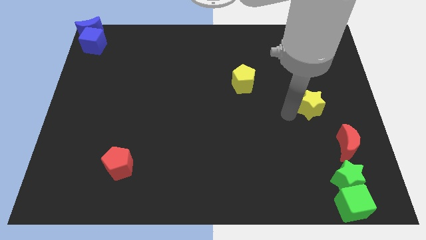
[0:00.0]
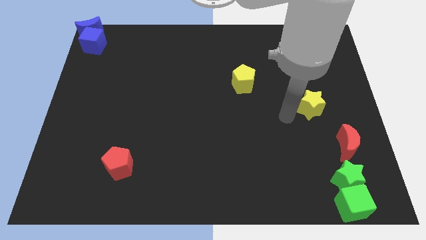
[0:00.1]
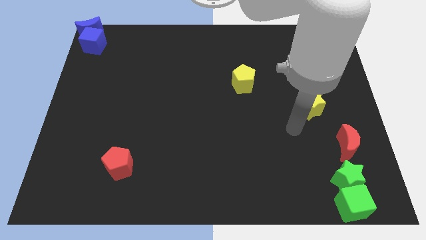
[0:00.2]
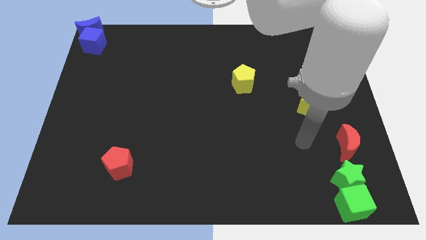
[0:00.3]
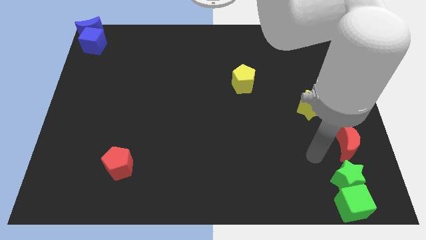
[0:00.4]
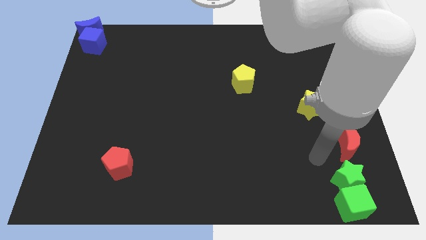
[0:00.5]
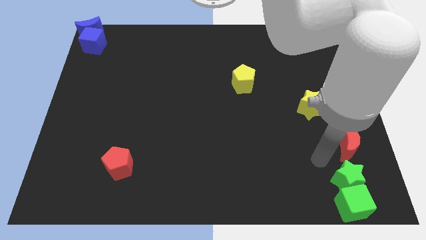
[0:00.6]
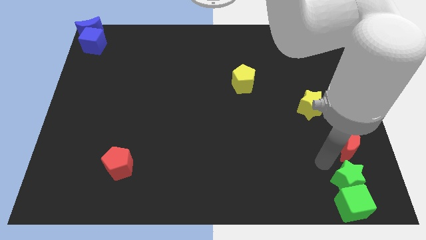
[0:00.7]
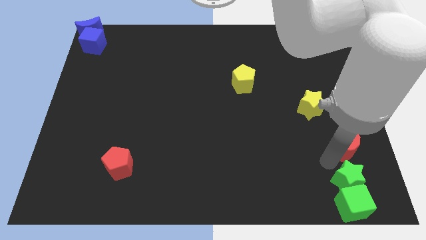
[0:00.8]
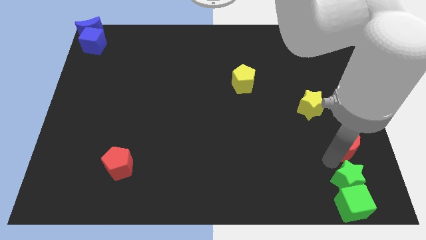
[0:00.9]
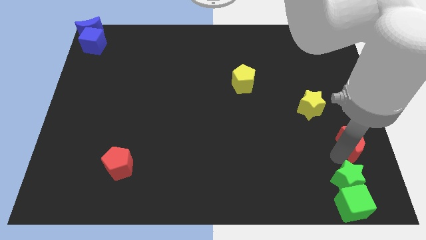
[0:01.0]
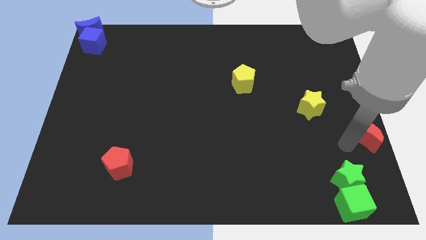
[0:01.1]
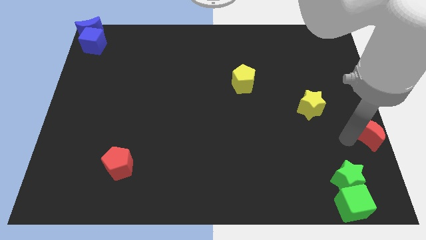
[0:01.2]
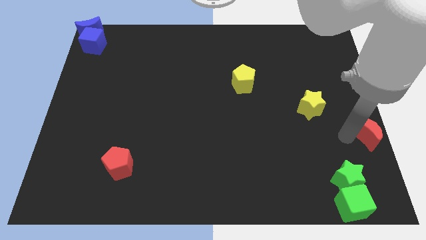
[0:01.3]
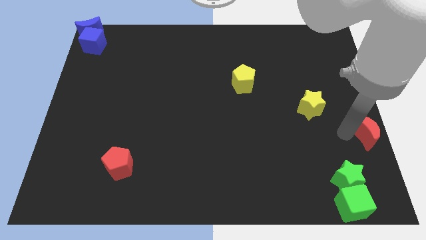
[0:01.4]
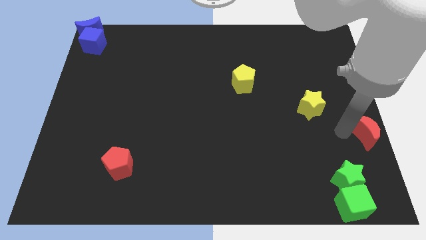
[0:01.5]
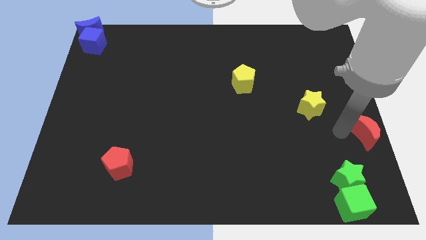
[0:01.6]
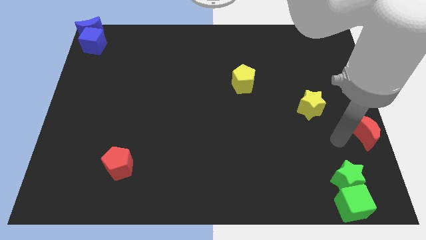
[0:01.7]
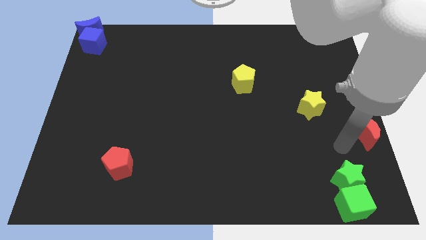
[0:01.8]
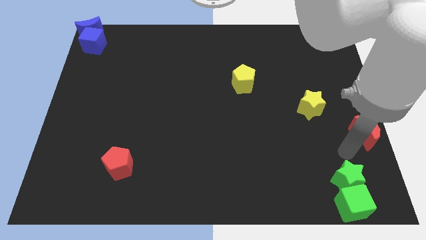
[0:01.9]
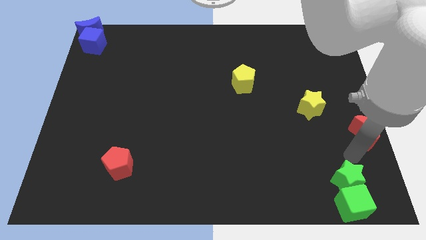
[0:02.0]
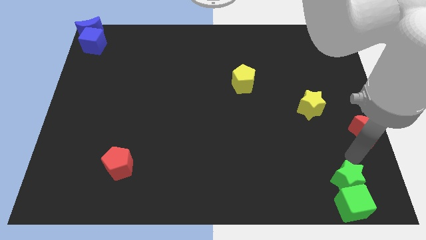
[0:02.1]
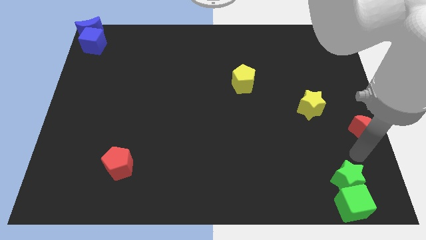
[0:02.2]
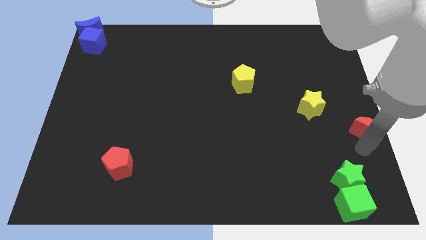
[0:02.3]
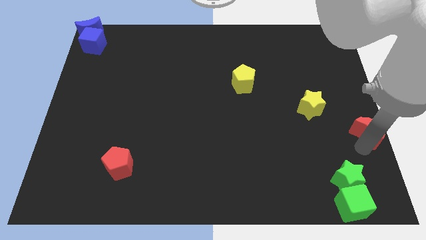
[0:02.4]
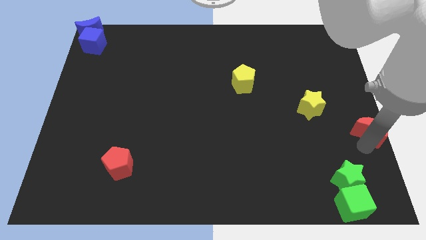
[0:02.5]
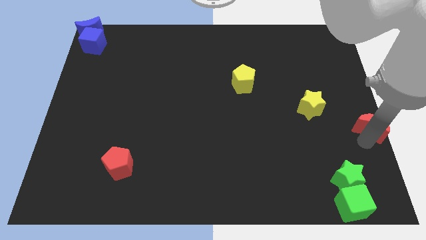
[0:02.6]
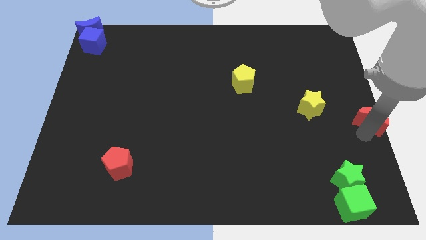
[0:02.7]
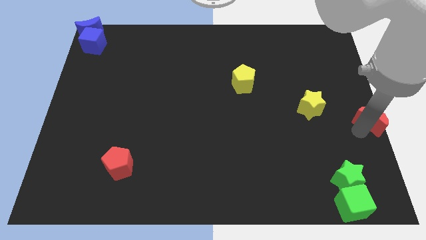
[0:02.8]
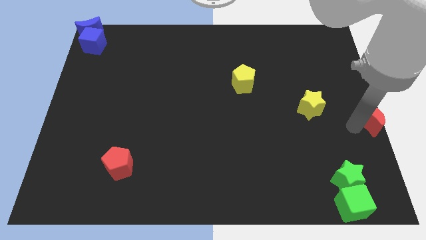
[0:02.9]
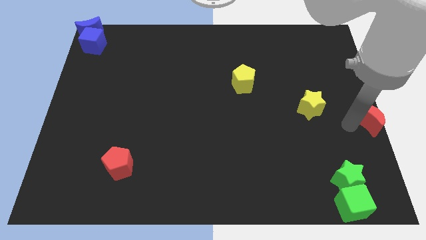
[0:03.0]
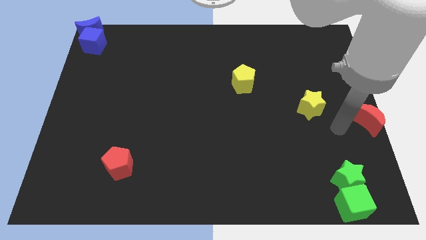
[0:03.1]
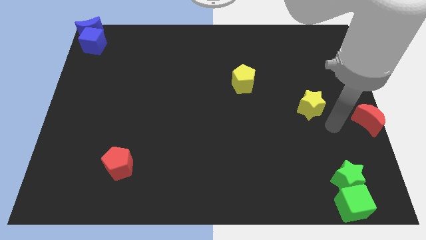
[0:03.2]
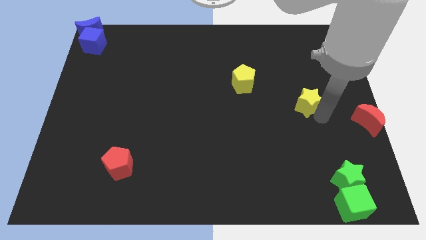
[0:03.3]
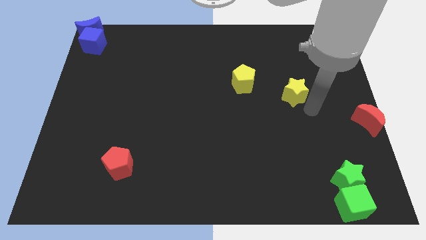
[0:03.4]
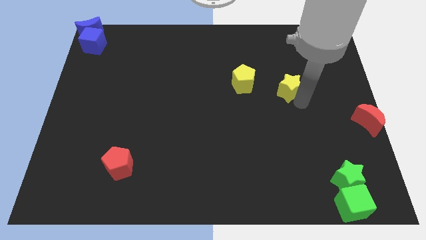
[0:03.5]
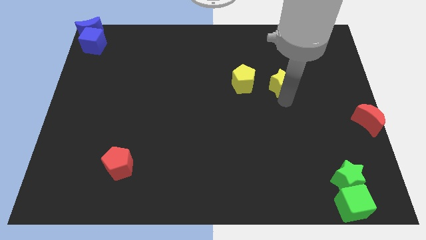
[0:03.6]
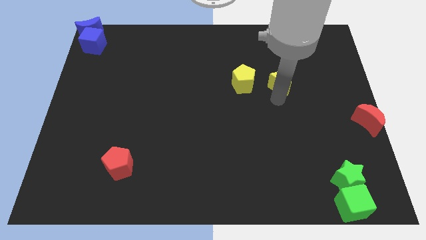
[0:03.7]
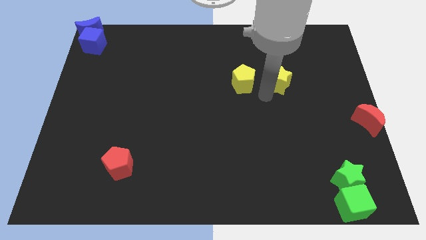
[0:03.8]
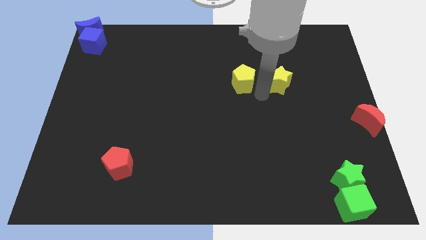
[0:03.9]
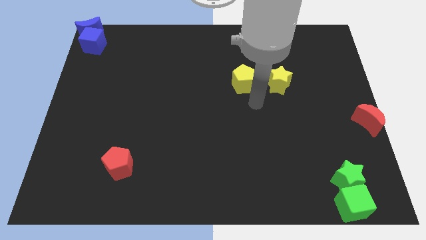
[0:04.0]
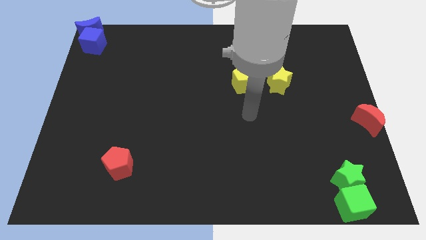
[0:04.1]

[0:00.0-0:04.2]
slide the yellow star right to the yellow pentagon

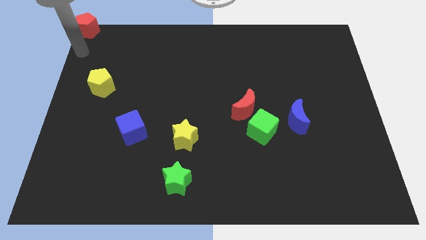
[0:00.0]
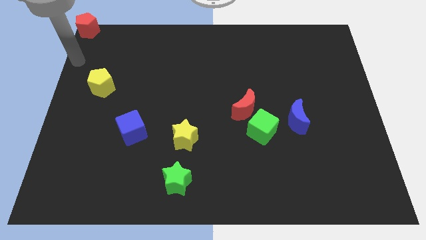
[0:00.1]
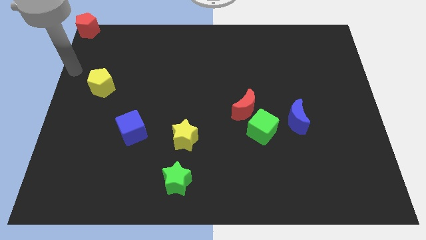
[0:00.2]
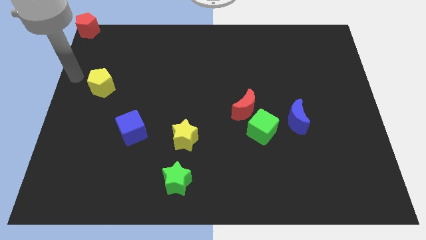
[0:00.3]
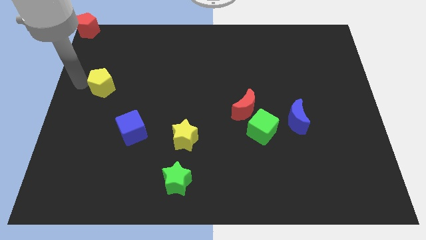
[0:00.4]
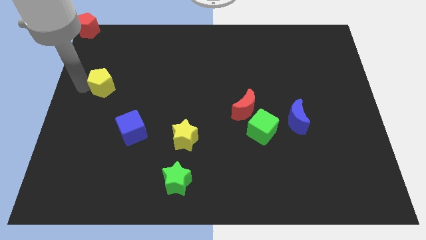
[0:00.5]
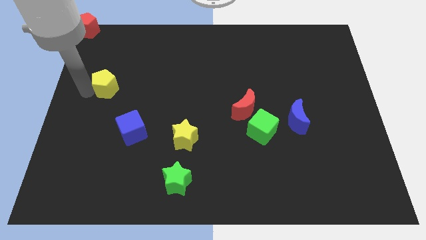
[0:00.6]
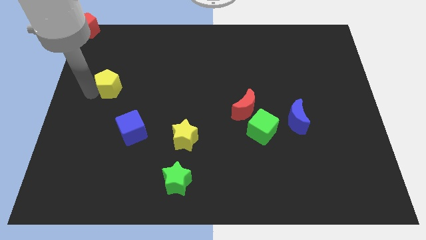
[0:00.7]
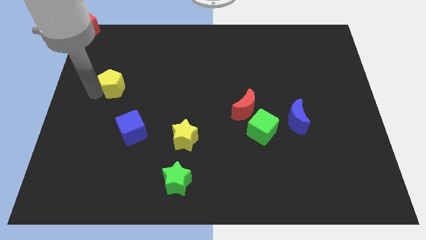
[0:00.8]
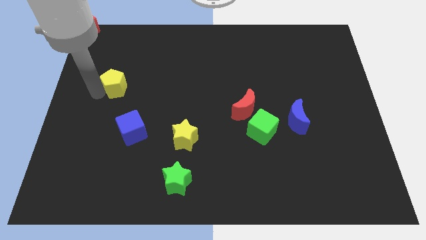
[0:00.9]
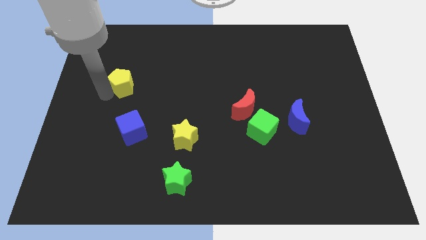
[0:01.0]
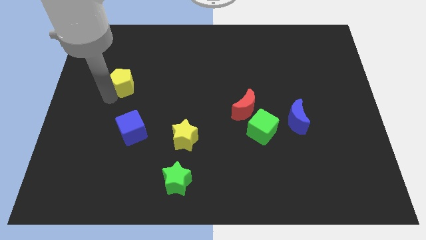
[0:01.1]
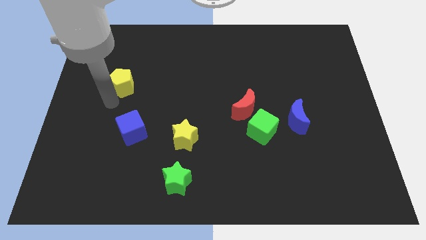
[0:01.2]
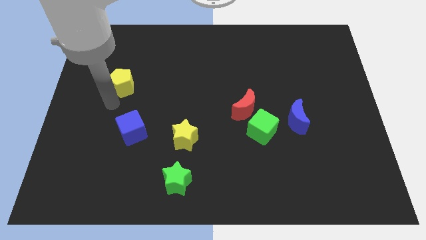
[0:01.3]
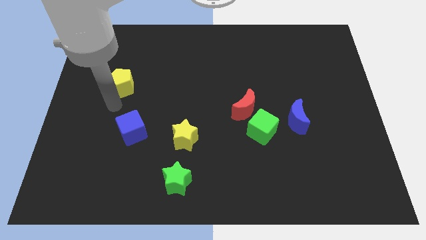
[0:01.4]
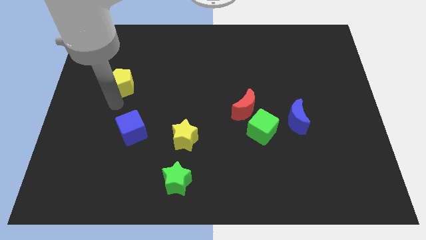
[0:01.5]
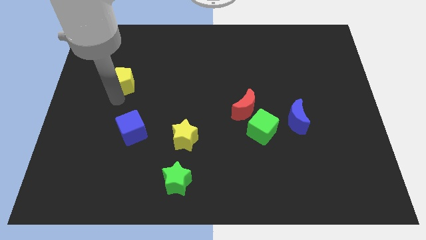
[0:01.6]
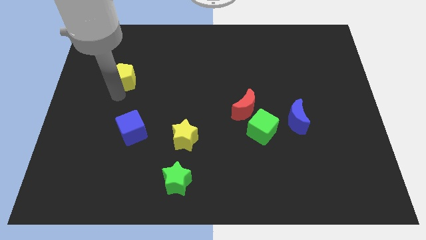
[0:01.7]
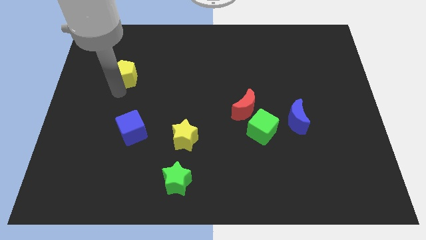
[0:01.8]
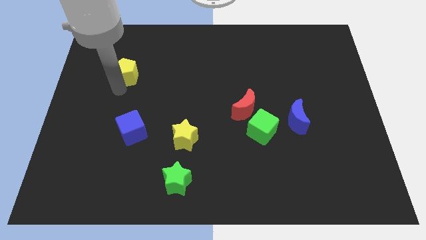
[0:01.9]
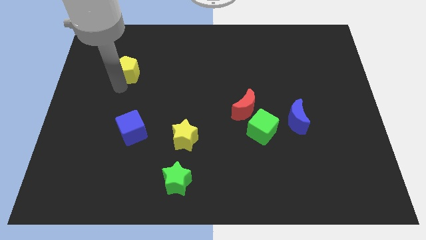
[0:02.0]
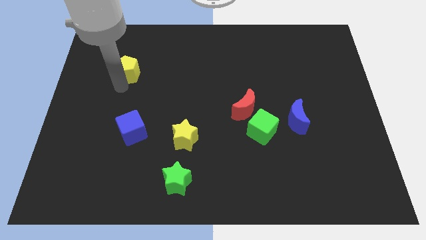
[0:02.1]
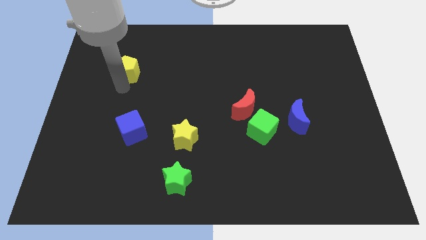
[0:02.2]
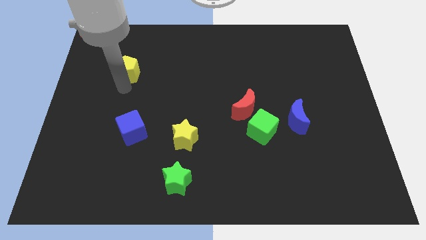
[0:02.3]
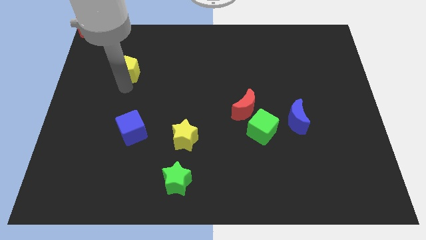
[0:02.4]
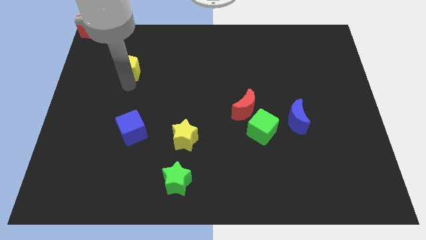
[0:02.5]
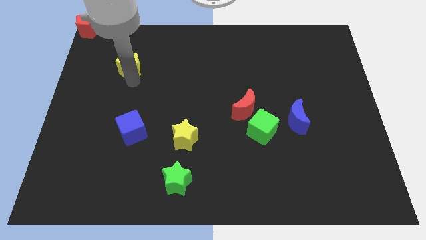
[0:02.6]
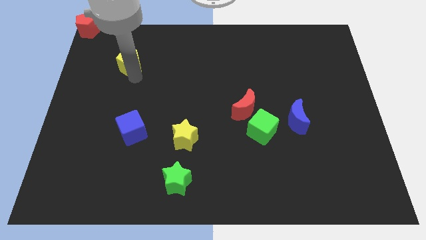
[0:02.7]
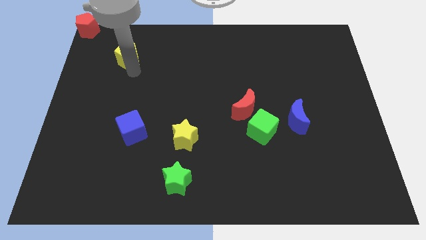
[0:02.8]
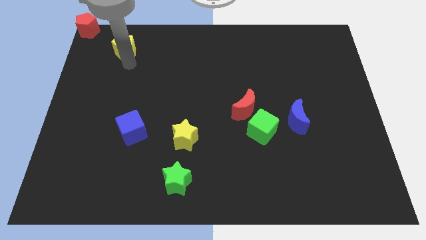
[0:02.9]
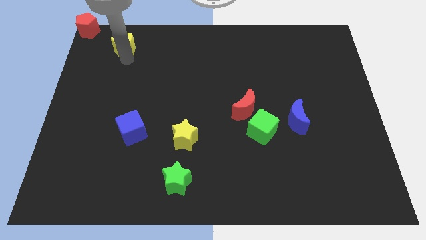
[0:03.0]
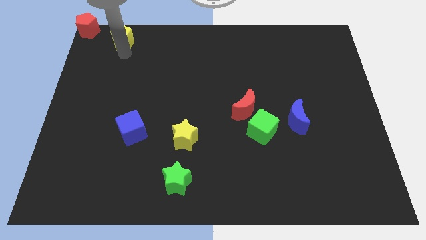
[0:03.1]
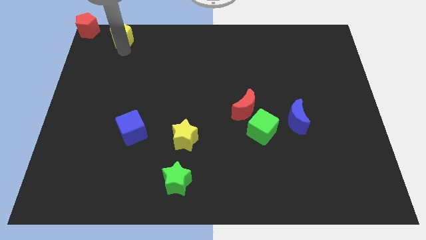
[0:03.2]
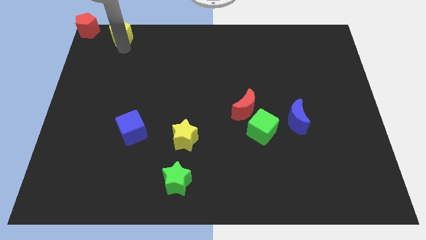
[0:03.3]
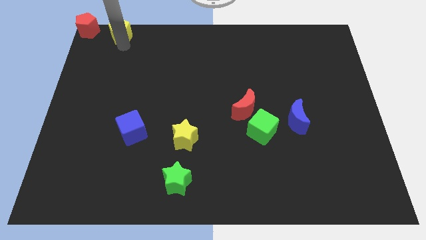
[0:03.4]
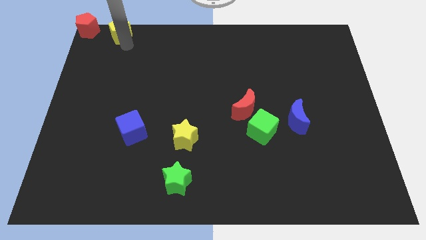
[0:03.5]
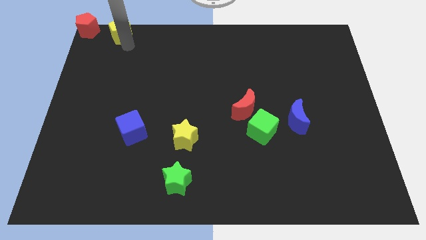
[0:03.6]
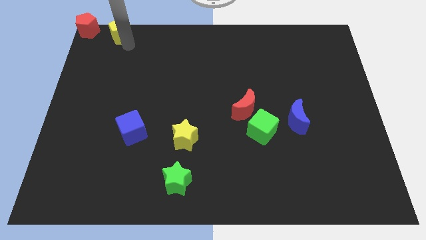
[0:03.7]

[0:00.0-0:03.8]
place the yellow pentagon parallel right to the red pentagon

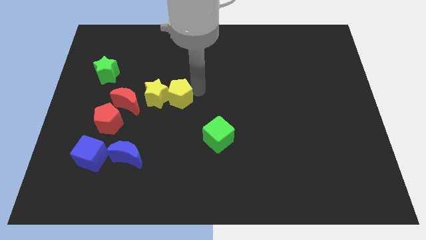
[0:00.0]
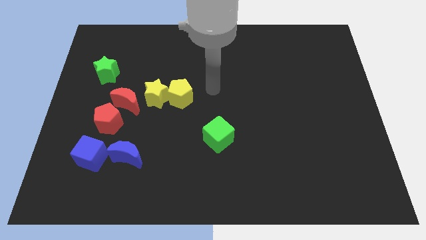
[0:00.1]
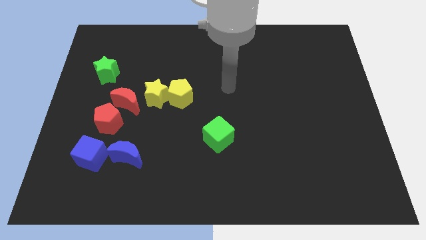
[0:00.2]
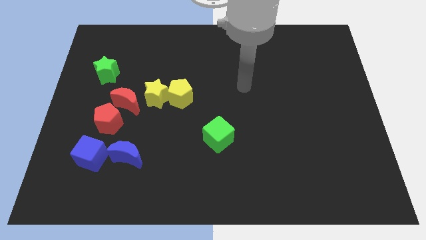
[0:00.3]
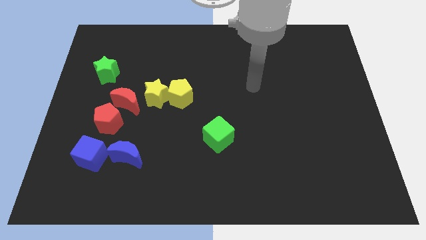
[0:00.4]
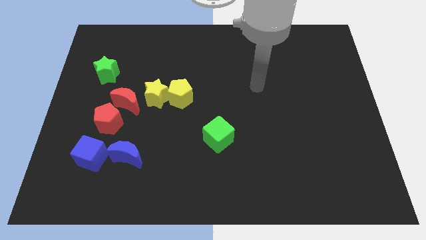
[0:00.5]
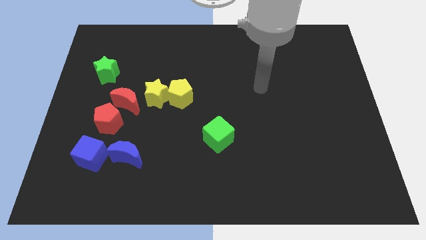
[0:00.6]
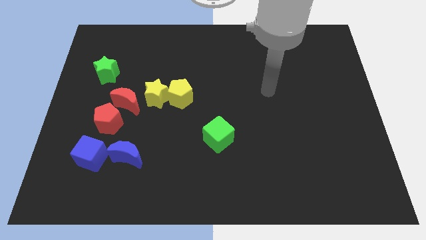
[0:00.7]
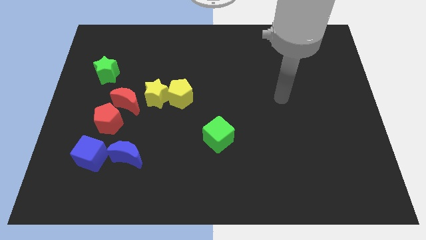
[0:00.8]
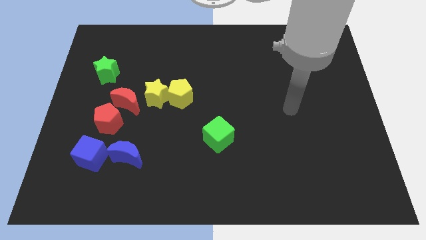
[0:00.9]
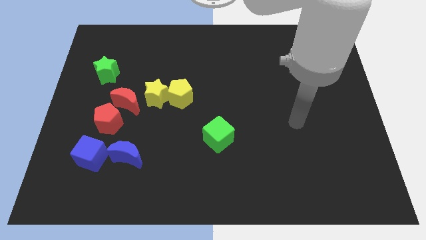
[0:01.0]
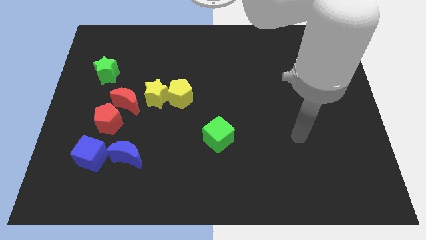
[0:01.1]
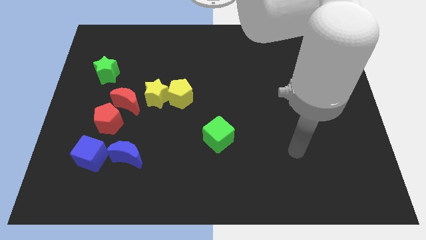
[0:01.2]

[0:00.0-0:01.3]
move your hand away from the yellow pentagon
